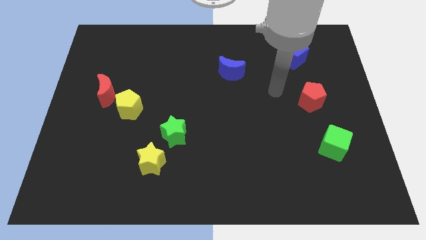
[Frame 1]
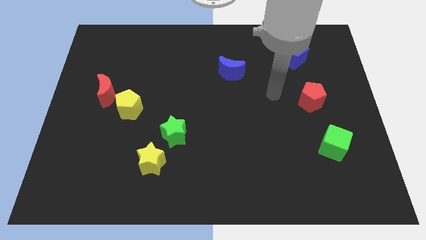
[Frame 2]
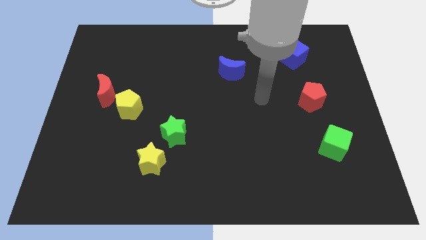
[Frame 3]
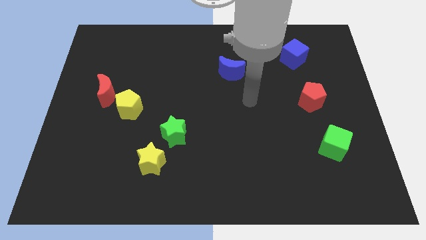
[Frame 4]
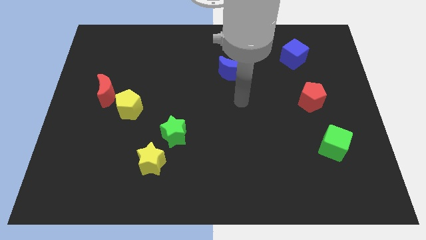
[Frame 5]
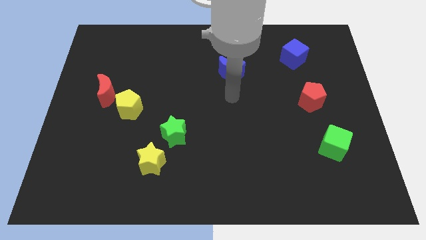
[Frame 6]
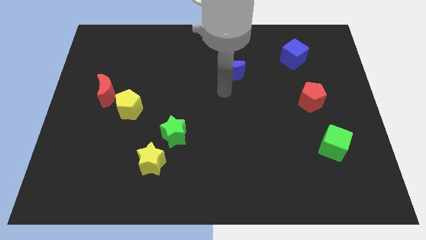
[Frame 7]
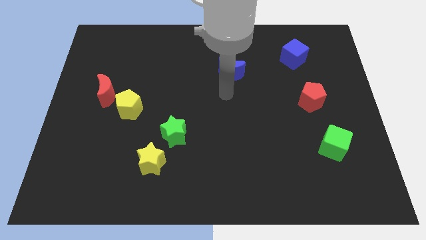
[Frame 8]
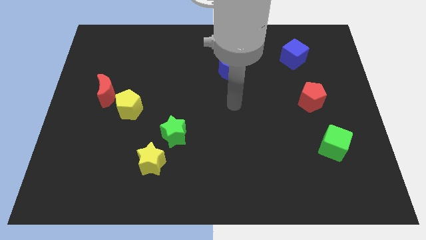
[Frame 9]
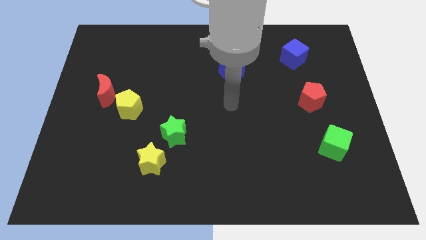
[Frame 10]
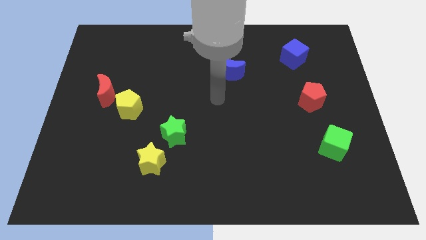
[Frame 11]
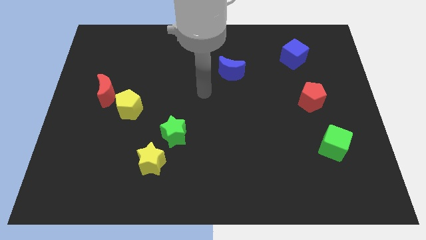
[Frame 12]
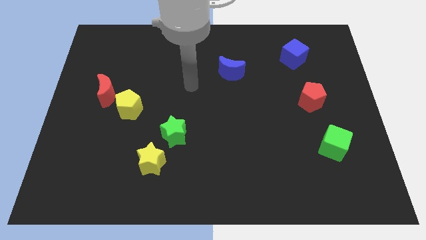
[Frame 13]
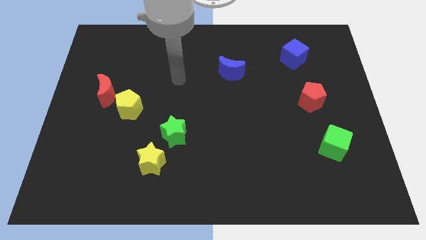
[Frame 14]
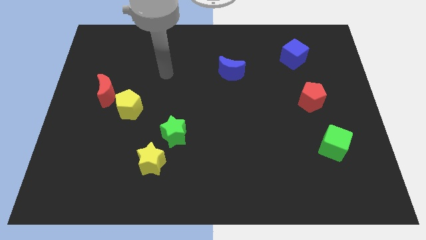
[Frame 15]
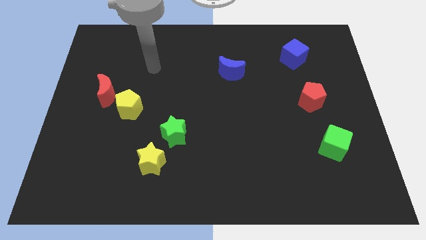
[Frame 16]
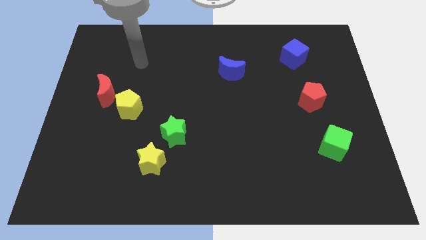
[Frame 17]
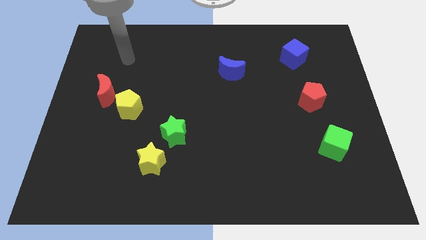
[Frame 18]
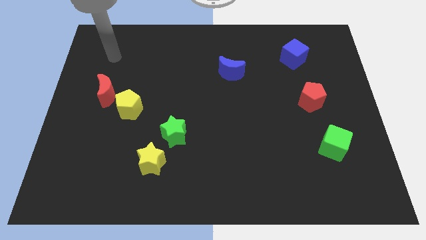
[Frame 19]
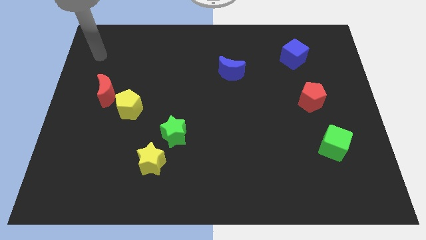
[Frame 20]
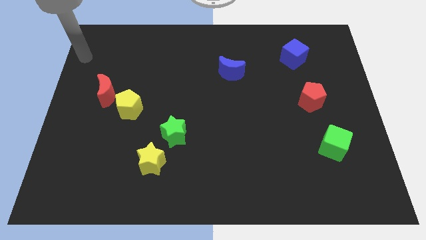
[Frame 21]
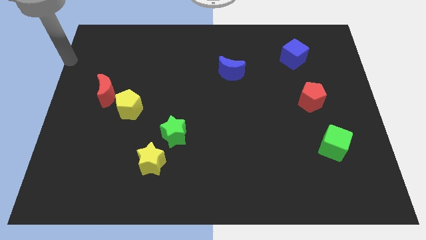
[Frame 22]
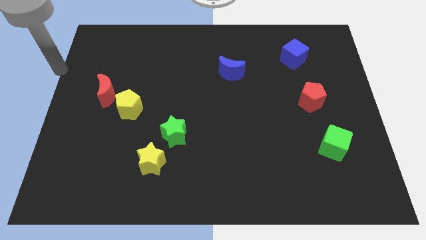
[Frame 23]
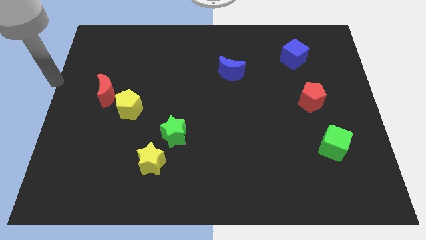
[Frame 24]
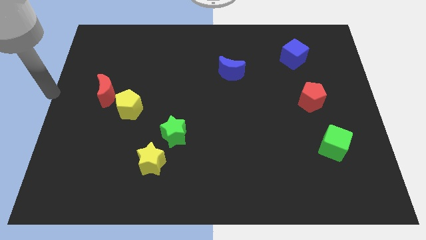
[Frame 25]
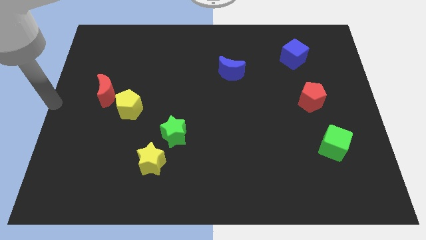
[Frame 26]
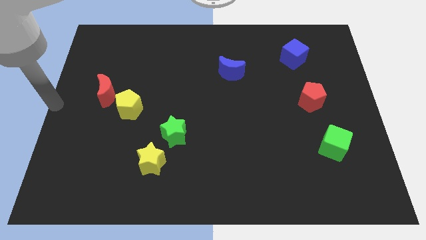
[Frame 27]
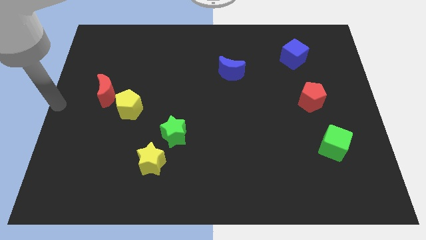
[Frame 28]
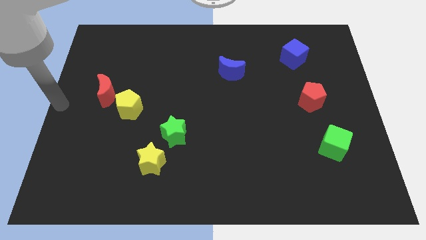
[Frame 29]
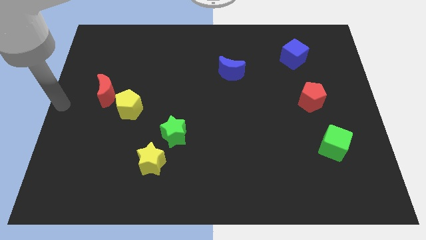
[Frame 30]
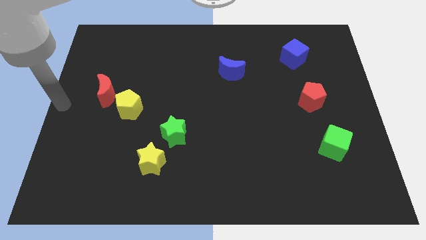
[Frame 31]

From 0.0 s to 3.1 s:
move arm to the center left of the board

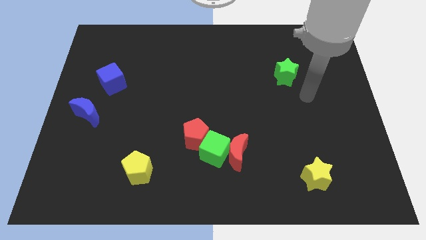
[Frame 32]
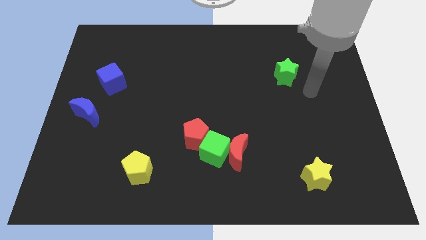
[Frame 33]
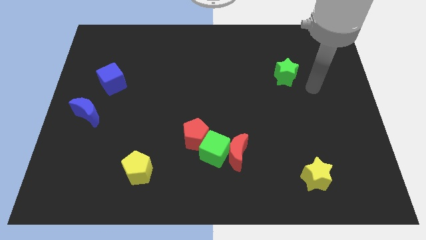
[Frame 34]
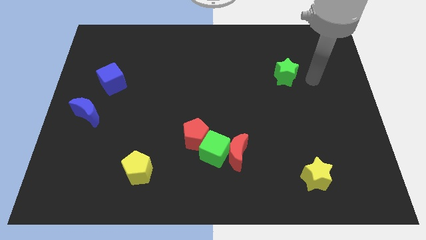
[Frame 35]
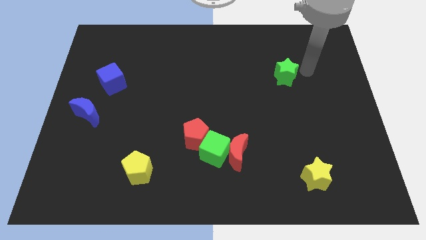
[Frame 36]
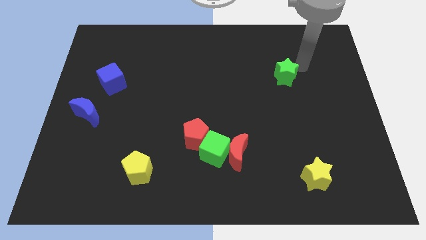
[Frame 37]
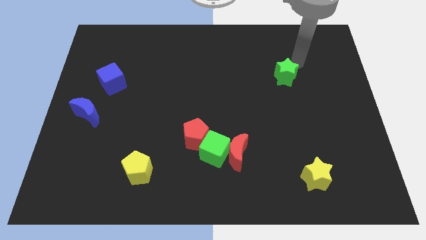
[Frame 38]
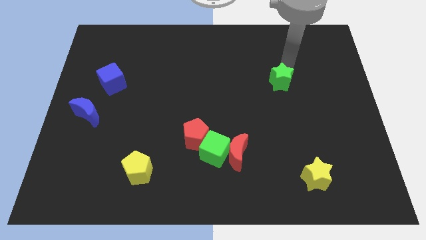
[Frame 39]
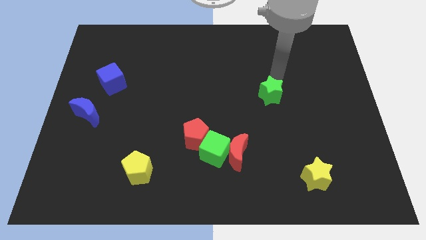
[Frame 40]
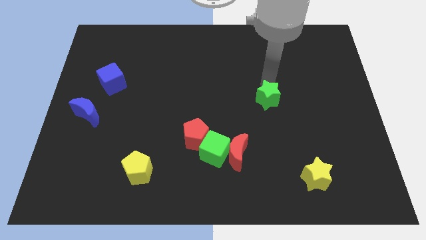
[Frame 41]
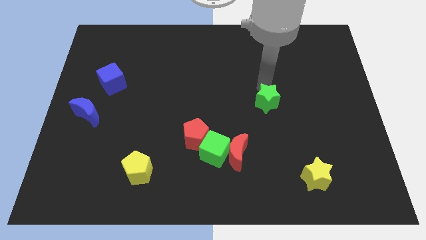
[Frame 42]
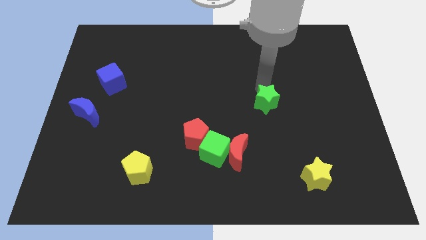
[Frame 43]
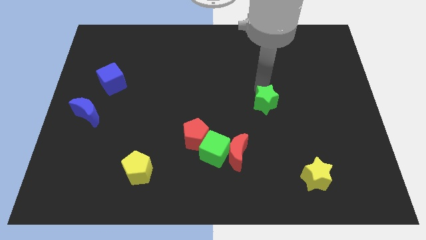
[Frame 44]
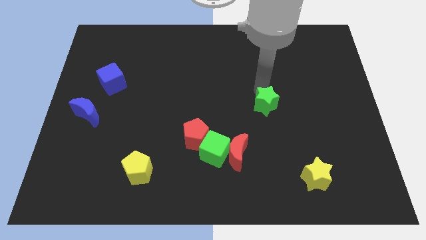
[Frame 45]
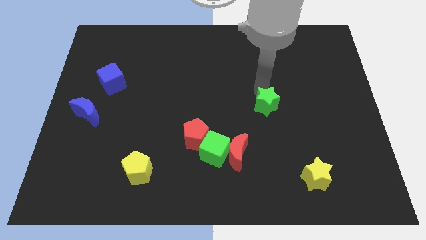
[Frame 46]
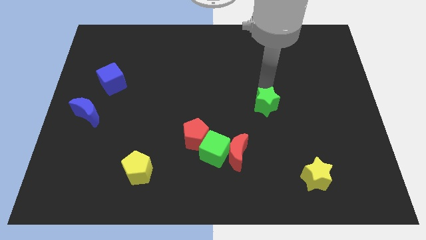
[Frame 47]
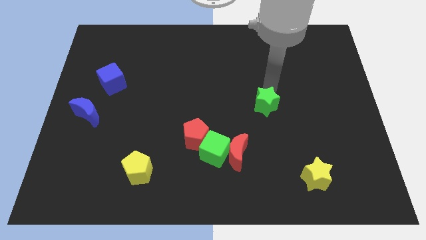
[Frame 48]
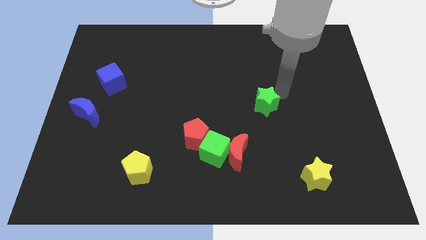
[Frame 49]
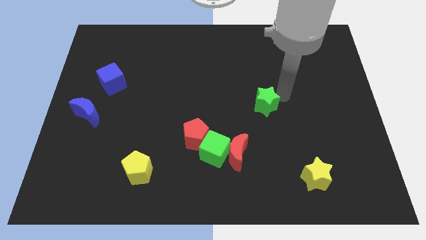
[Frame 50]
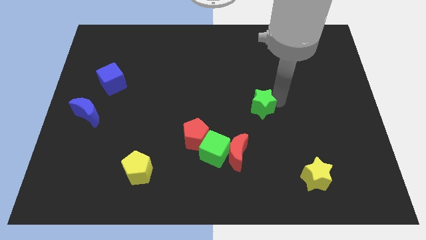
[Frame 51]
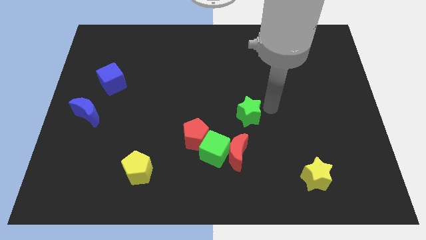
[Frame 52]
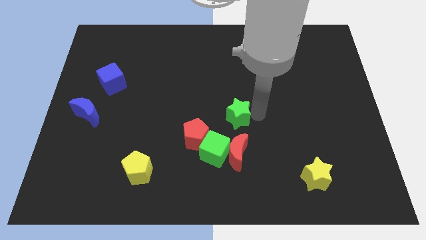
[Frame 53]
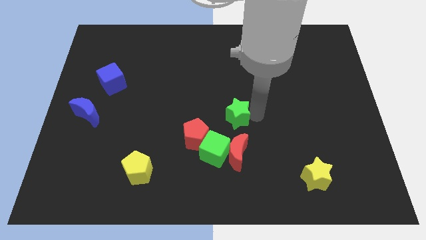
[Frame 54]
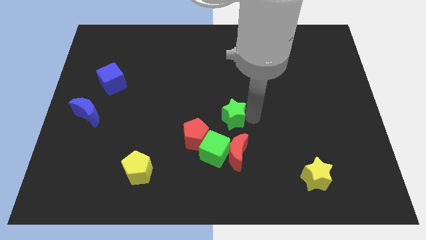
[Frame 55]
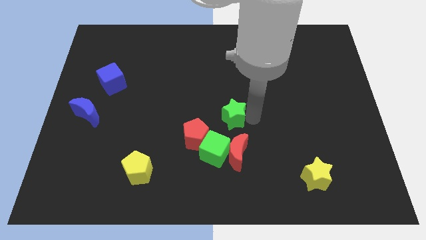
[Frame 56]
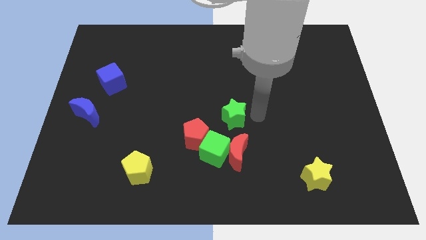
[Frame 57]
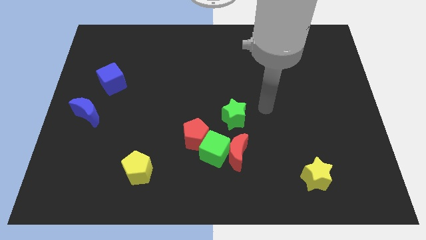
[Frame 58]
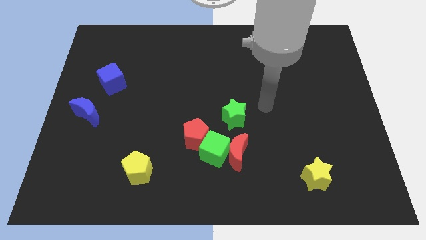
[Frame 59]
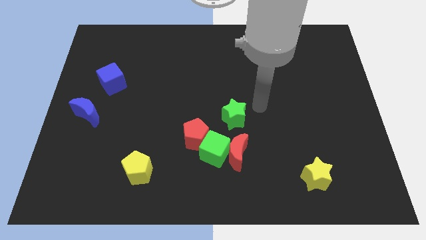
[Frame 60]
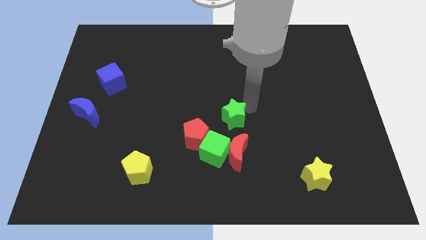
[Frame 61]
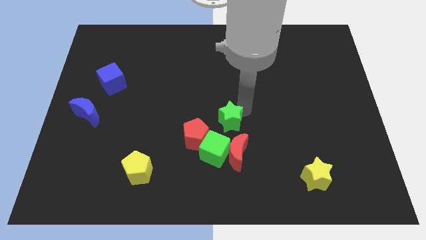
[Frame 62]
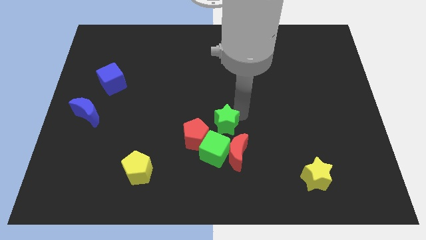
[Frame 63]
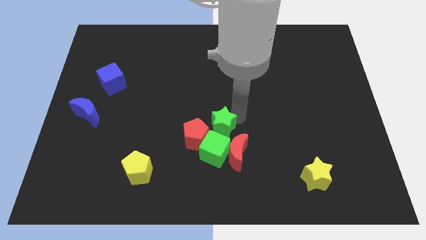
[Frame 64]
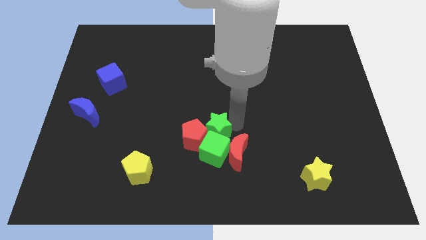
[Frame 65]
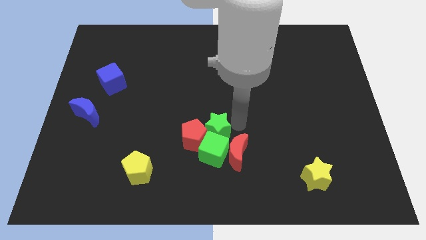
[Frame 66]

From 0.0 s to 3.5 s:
add the green star to the red pentagongreen cube and red moon

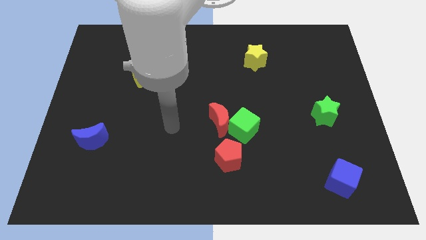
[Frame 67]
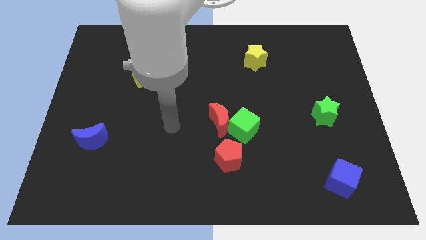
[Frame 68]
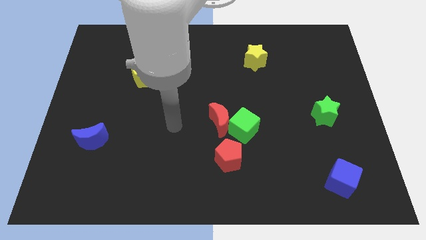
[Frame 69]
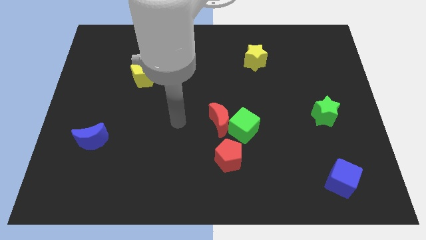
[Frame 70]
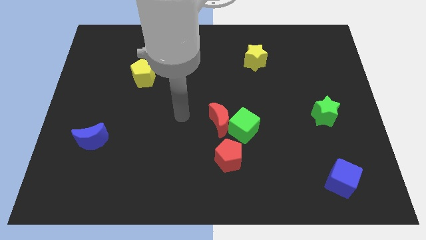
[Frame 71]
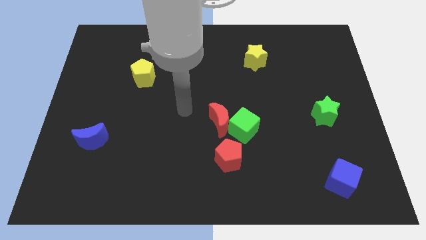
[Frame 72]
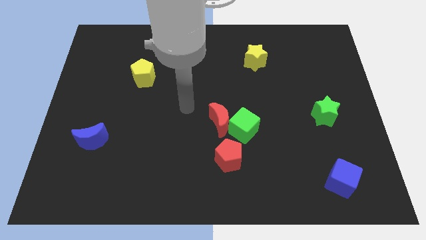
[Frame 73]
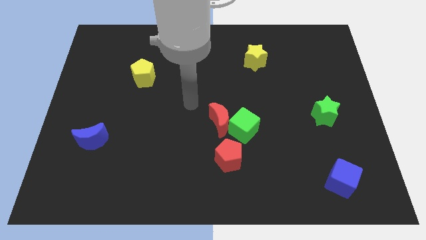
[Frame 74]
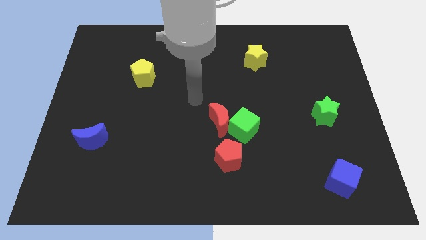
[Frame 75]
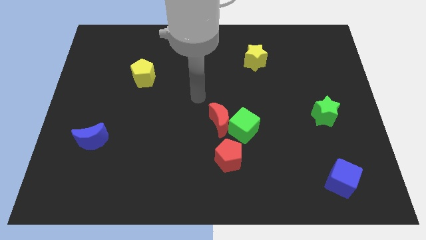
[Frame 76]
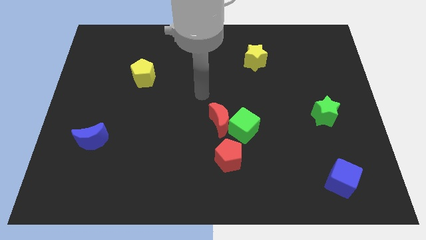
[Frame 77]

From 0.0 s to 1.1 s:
go near the red moon

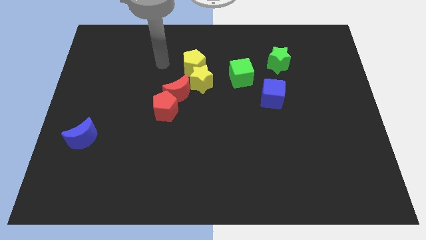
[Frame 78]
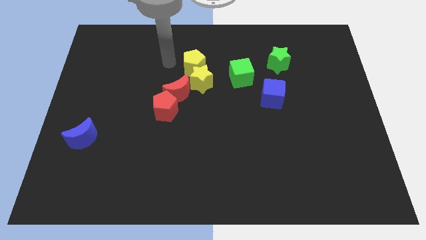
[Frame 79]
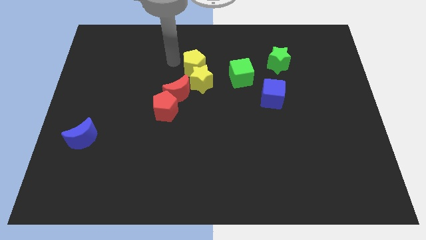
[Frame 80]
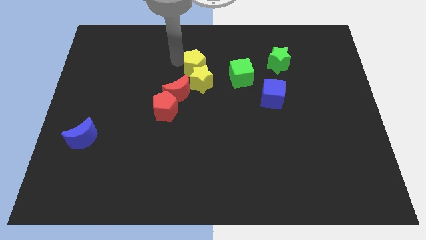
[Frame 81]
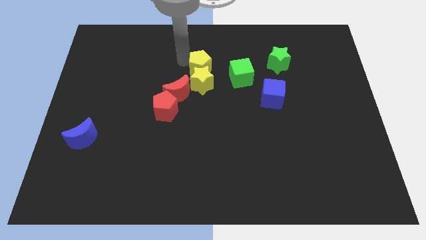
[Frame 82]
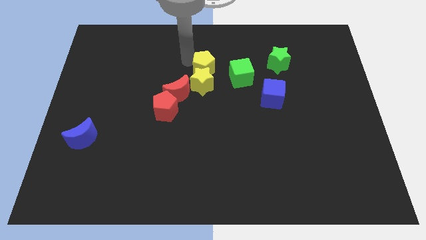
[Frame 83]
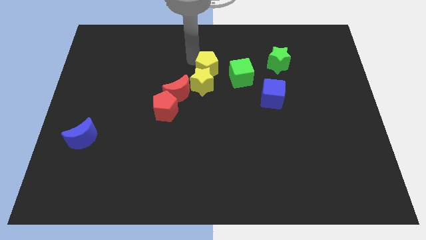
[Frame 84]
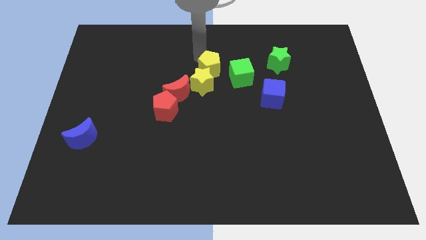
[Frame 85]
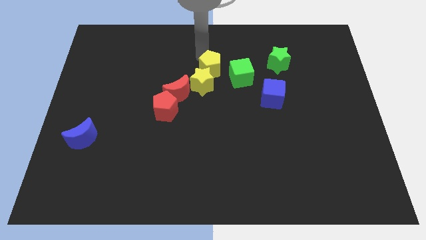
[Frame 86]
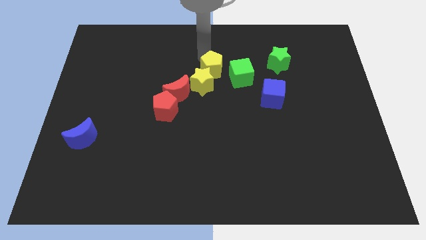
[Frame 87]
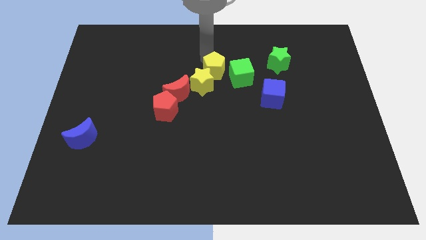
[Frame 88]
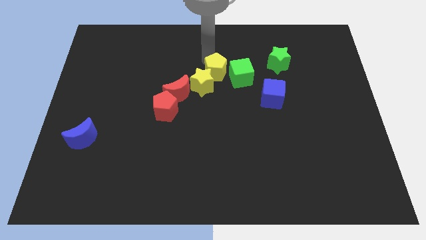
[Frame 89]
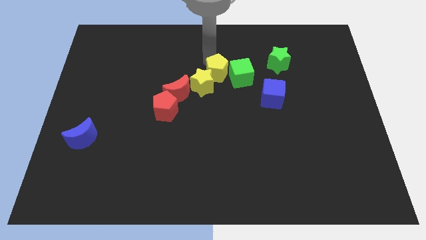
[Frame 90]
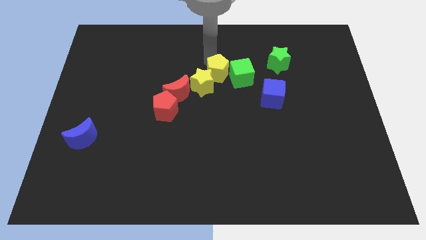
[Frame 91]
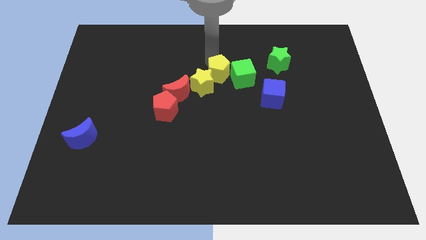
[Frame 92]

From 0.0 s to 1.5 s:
touch yellow star with yellow pentagon
